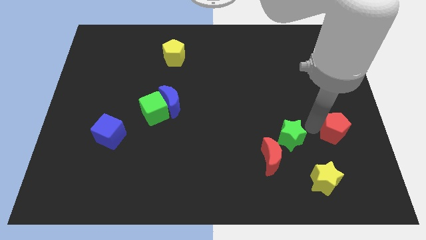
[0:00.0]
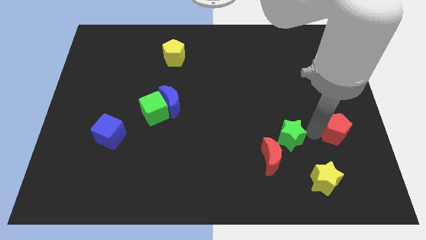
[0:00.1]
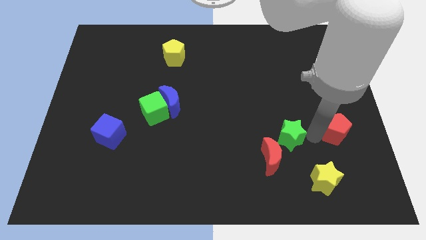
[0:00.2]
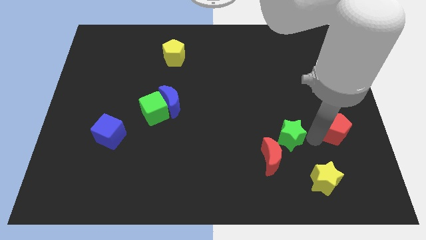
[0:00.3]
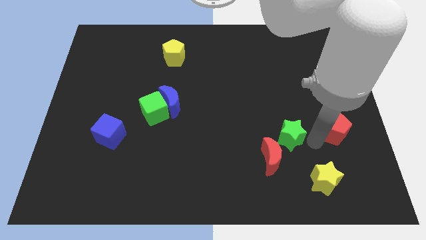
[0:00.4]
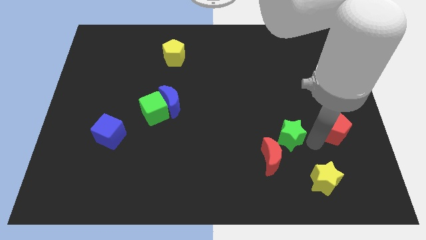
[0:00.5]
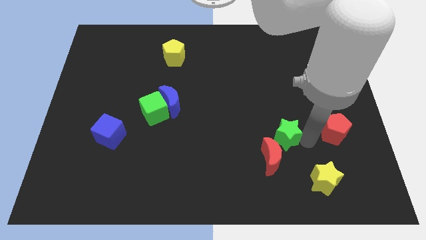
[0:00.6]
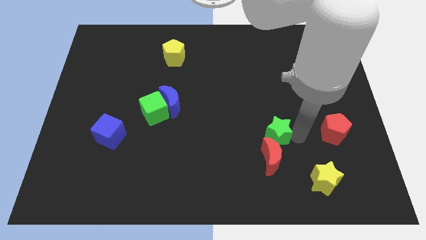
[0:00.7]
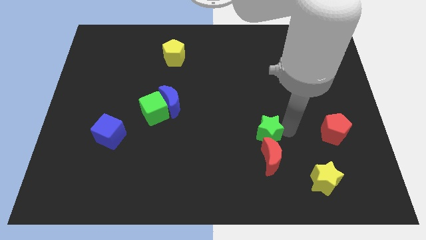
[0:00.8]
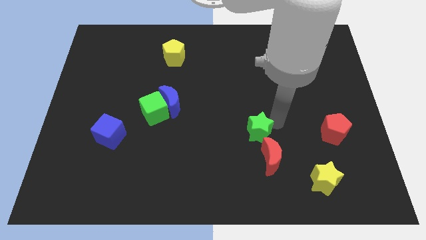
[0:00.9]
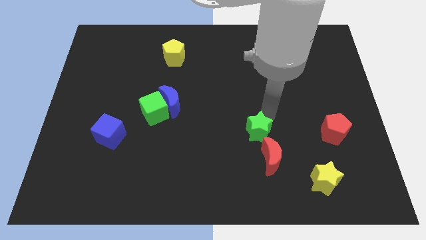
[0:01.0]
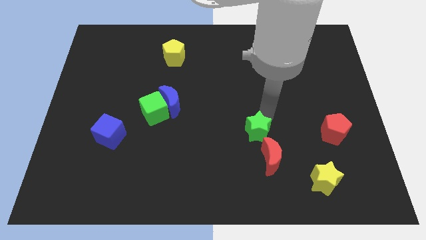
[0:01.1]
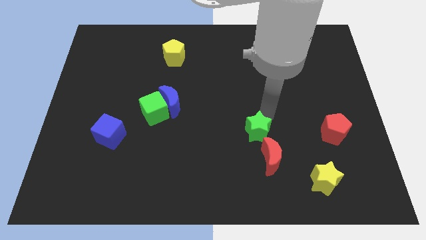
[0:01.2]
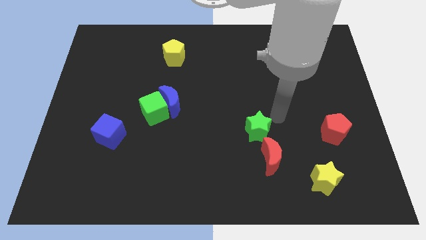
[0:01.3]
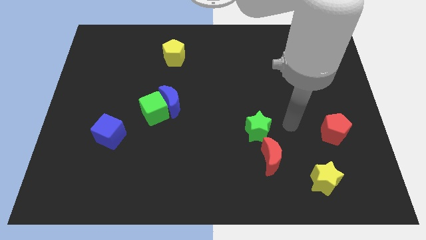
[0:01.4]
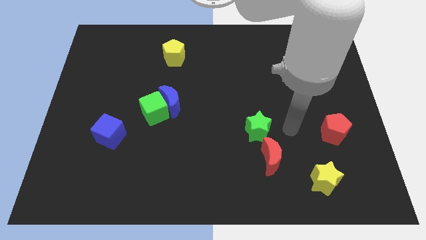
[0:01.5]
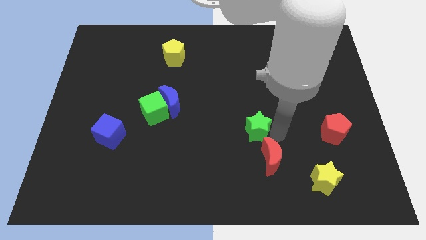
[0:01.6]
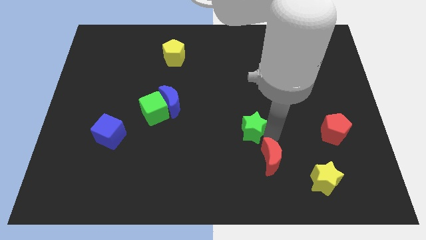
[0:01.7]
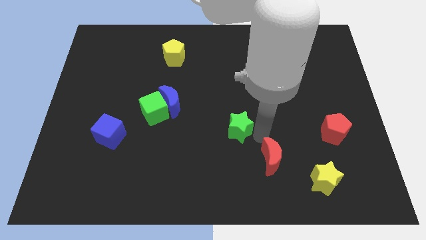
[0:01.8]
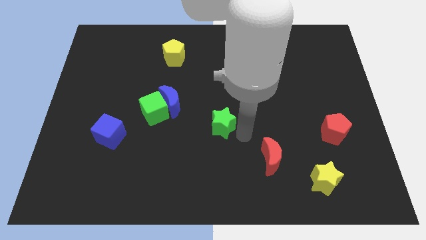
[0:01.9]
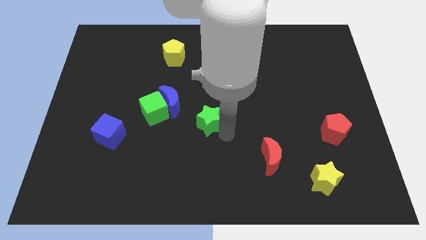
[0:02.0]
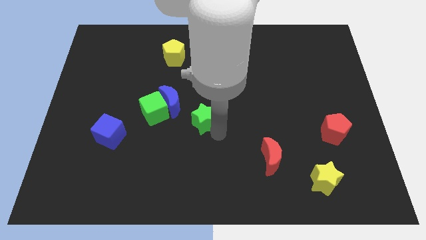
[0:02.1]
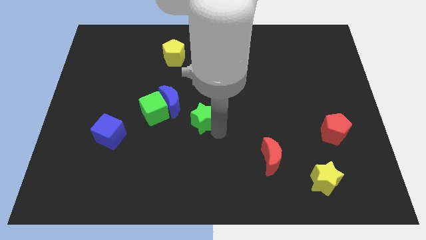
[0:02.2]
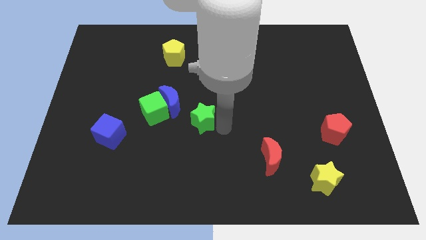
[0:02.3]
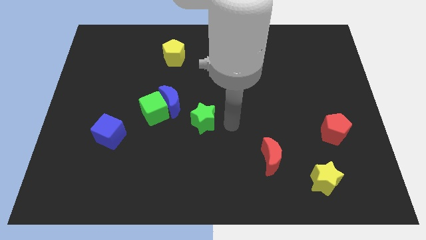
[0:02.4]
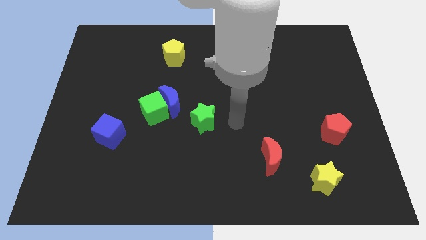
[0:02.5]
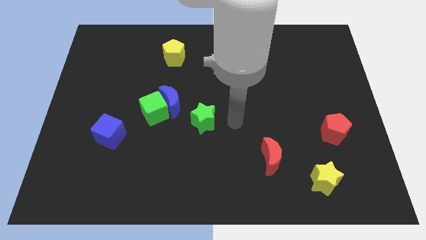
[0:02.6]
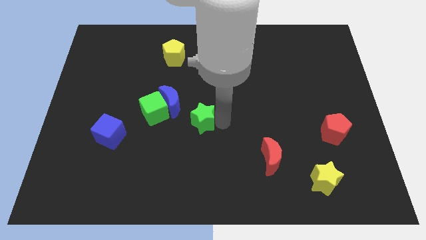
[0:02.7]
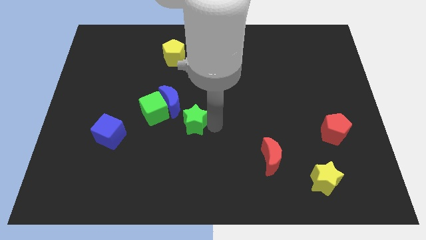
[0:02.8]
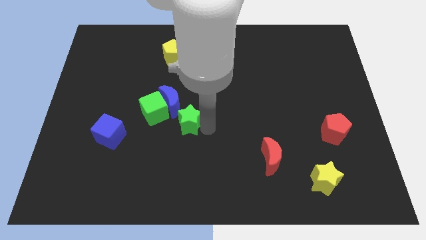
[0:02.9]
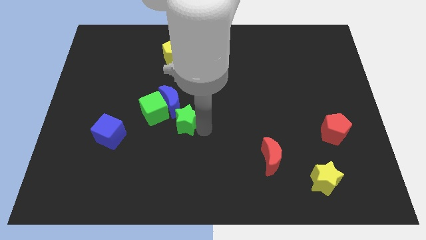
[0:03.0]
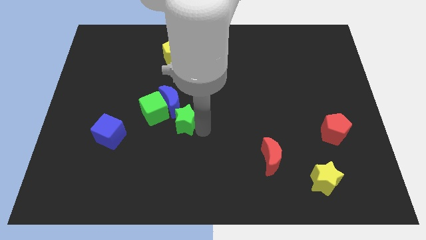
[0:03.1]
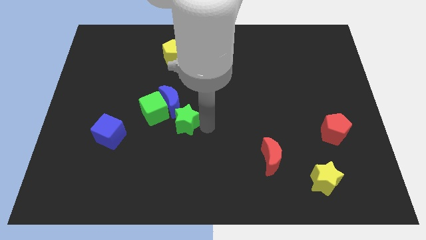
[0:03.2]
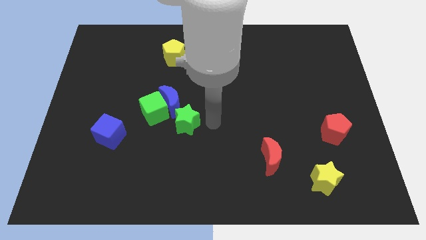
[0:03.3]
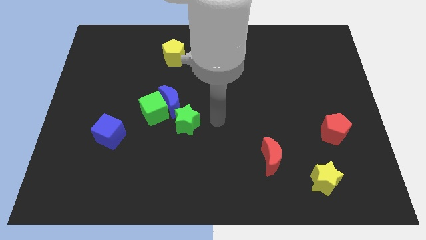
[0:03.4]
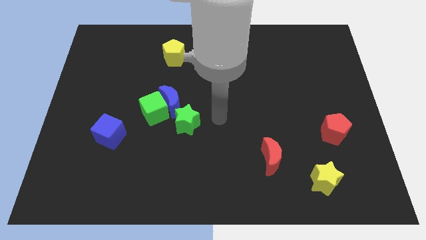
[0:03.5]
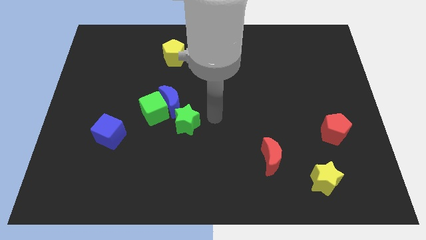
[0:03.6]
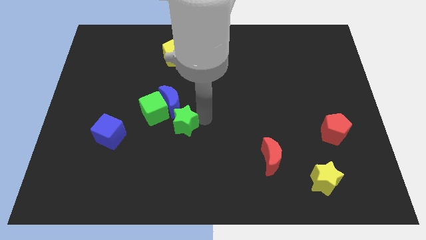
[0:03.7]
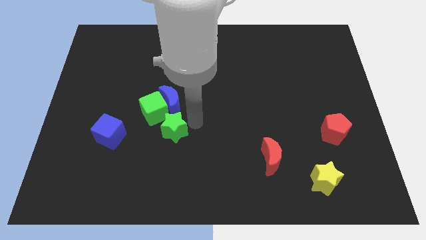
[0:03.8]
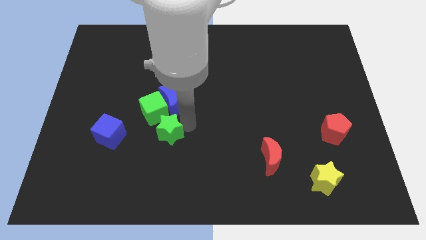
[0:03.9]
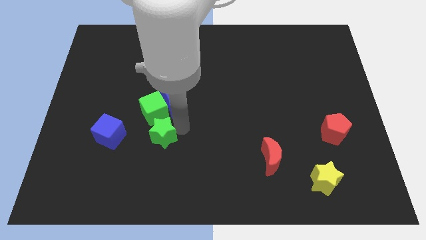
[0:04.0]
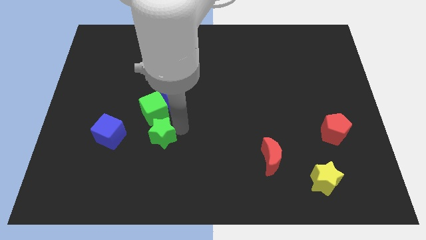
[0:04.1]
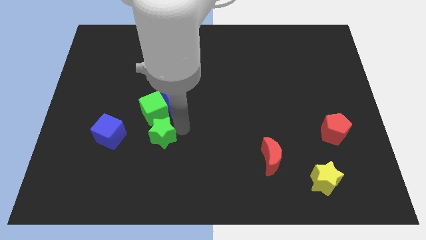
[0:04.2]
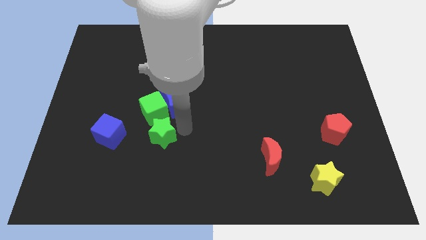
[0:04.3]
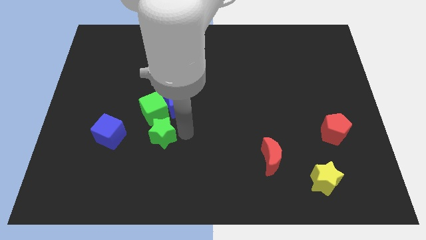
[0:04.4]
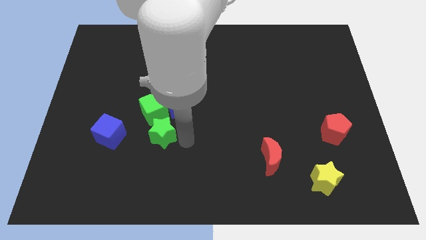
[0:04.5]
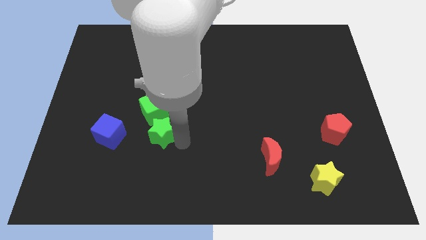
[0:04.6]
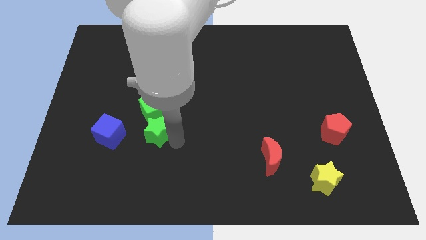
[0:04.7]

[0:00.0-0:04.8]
move the green star towards the blue cube

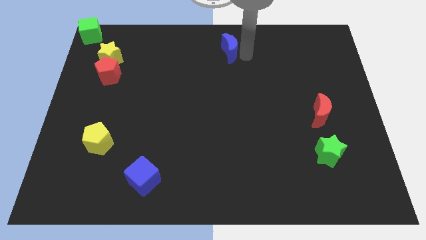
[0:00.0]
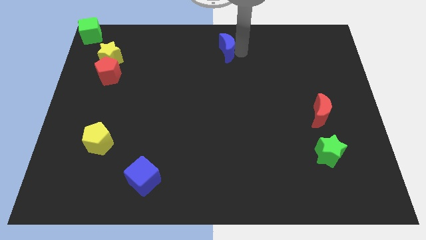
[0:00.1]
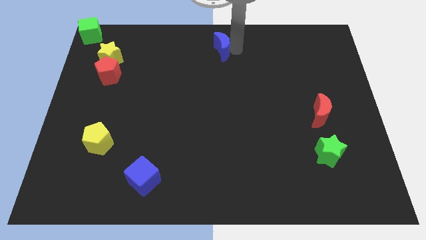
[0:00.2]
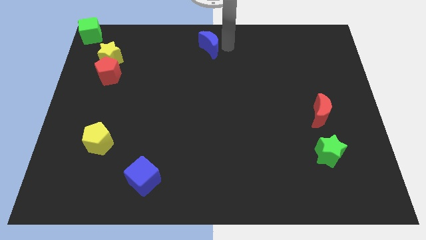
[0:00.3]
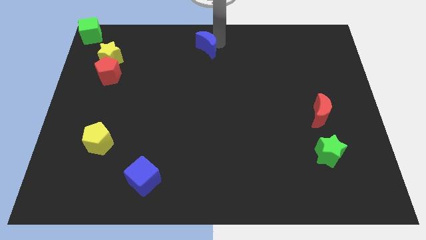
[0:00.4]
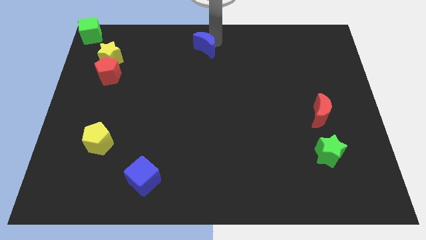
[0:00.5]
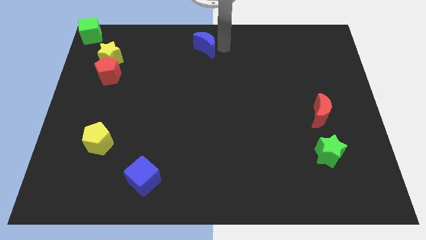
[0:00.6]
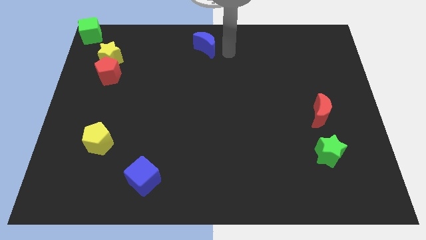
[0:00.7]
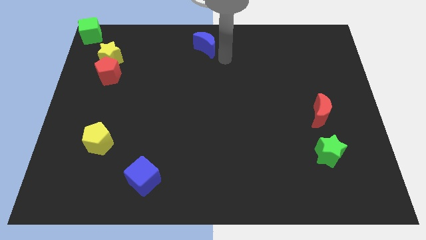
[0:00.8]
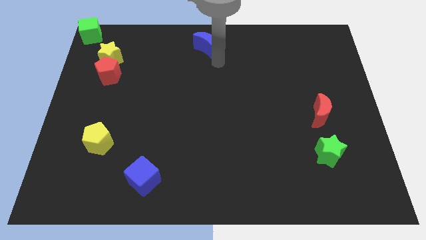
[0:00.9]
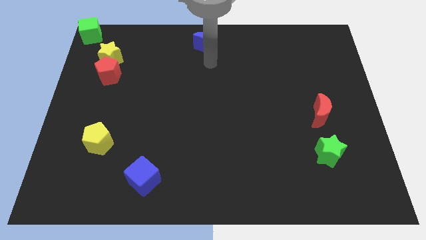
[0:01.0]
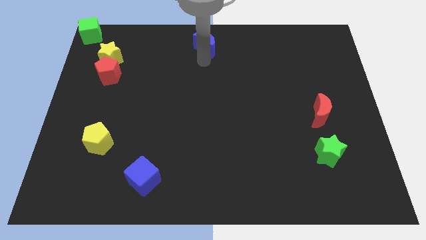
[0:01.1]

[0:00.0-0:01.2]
push the blue crescent to the top center of board

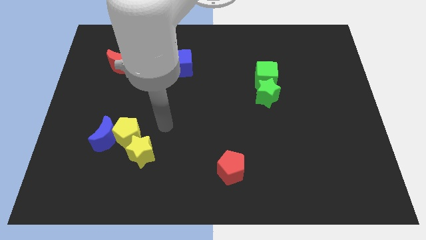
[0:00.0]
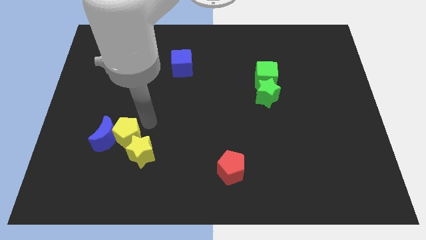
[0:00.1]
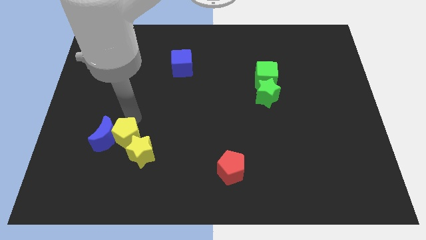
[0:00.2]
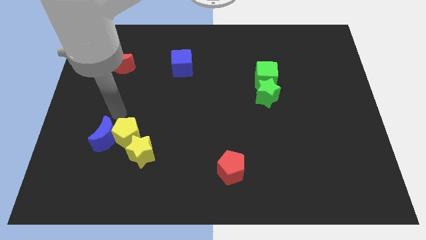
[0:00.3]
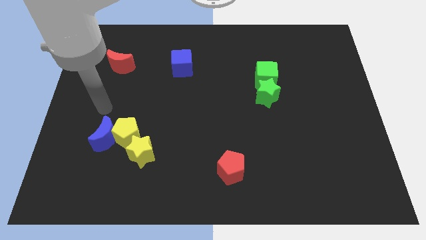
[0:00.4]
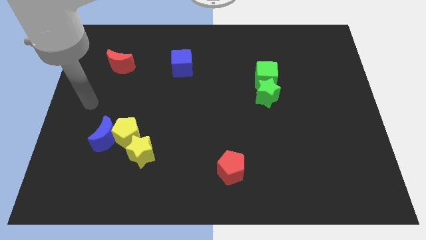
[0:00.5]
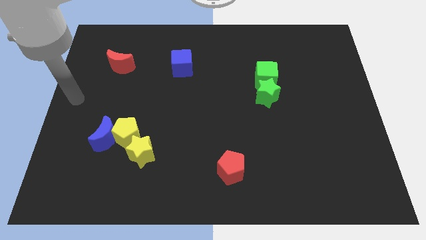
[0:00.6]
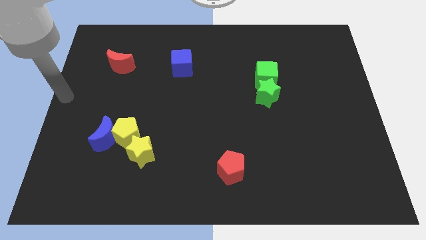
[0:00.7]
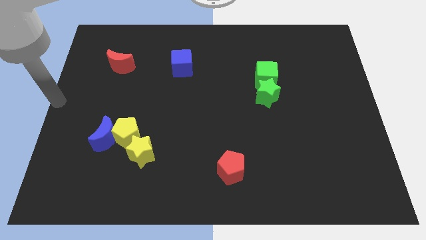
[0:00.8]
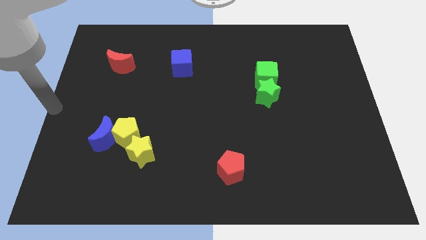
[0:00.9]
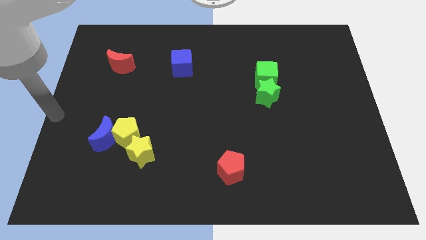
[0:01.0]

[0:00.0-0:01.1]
put your arm at the center left

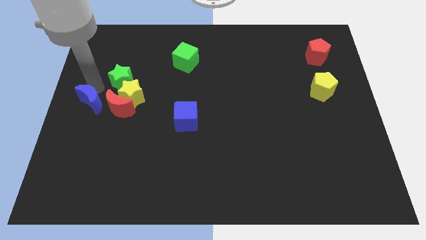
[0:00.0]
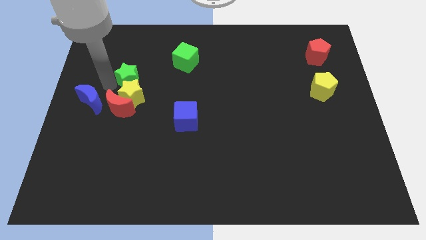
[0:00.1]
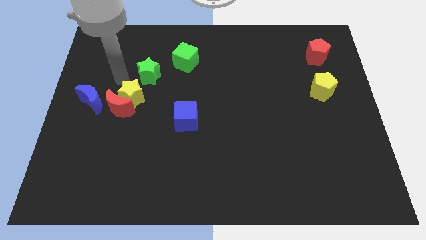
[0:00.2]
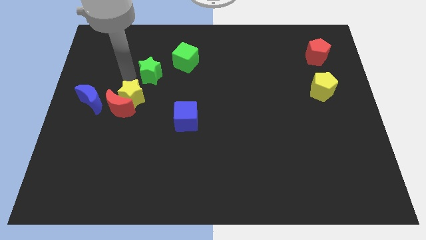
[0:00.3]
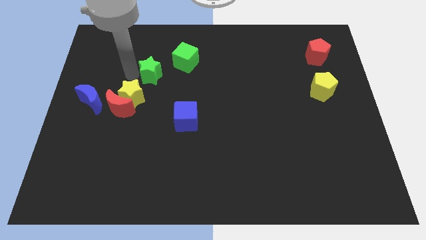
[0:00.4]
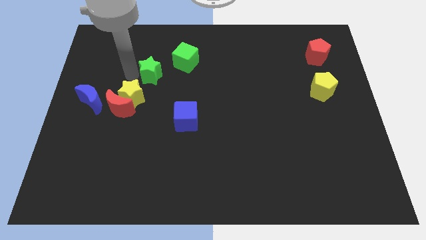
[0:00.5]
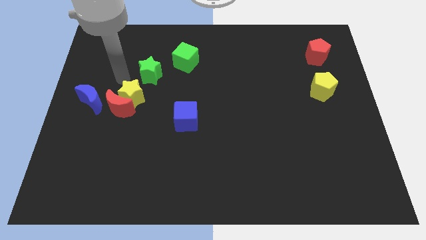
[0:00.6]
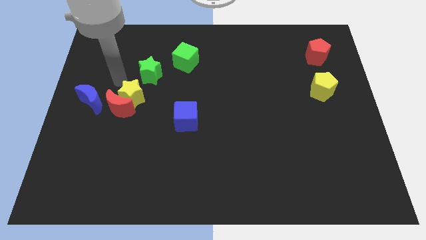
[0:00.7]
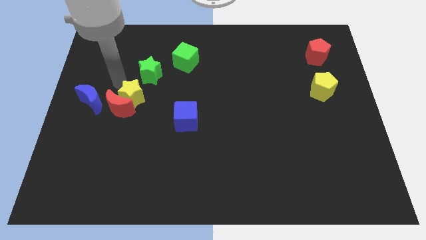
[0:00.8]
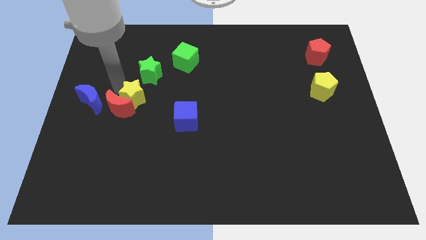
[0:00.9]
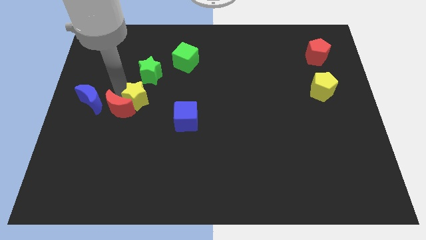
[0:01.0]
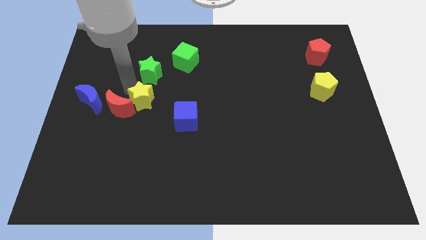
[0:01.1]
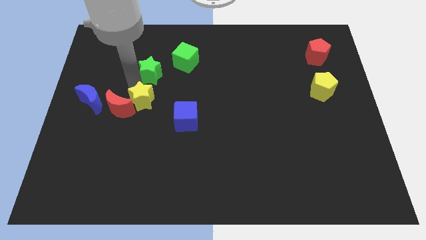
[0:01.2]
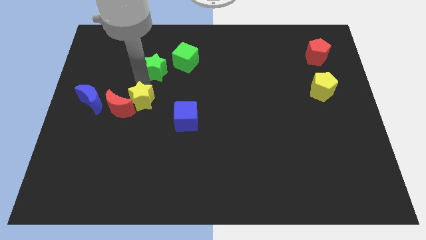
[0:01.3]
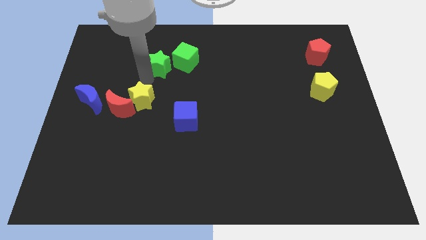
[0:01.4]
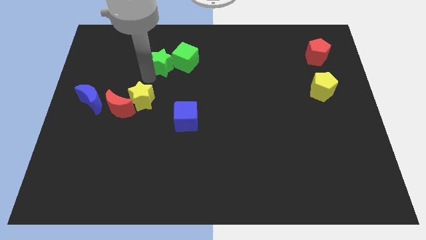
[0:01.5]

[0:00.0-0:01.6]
push the green star into the green cube

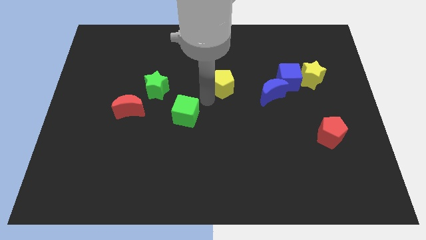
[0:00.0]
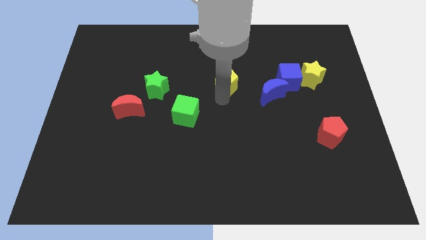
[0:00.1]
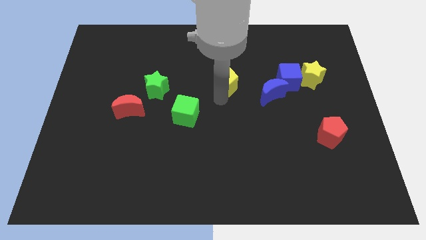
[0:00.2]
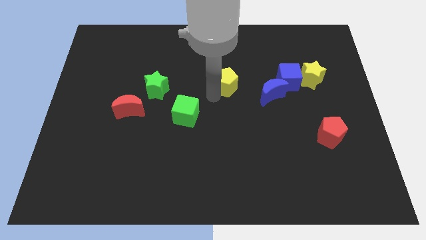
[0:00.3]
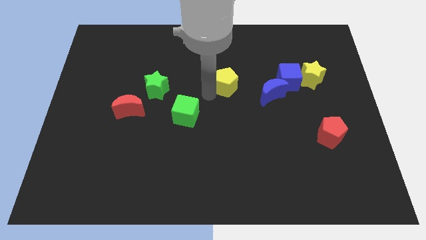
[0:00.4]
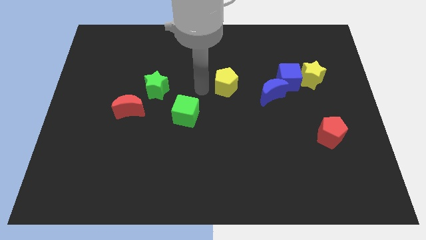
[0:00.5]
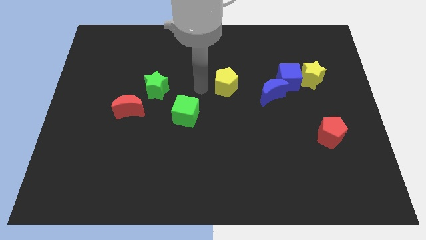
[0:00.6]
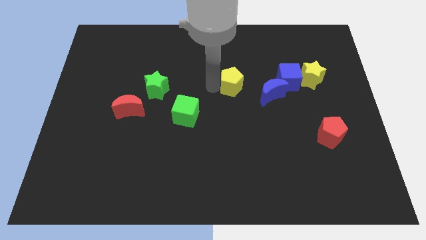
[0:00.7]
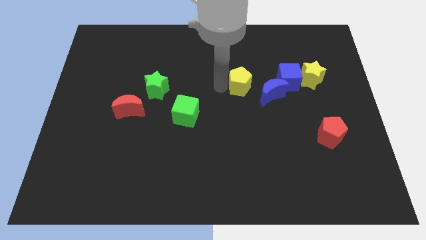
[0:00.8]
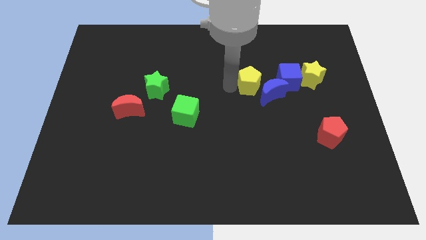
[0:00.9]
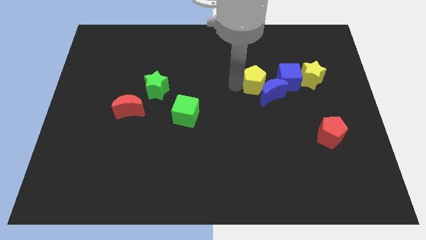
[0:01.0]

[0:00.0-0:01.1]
push the yellow pentagon left to the blue cube
